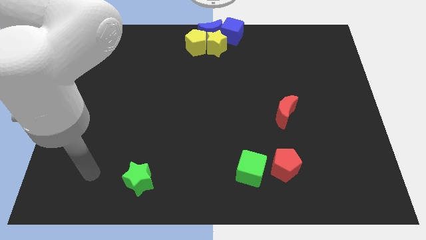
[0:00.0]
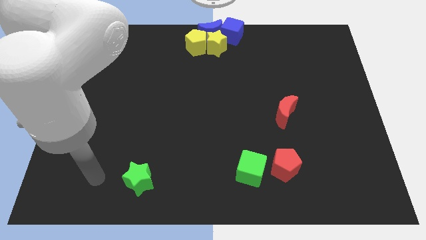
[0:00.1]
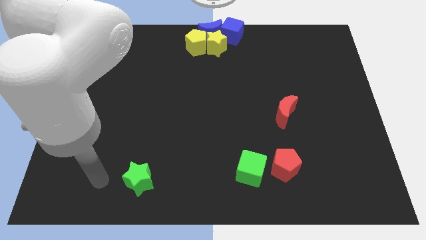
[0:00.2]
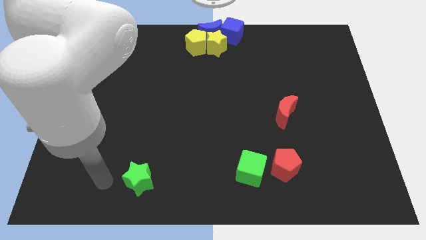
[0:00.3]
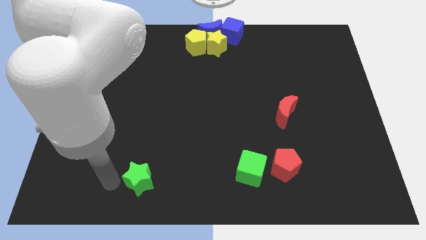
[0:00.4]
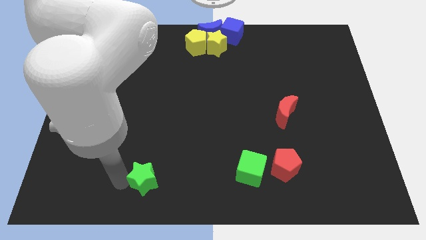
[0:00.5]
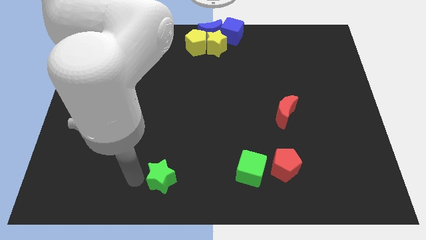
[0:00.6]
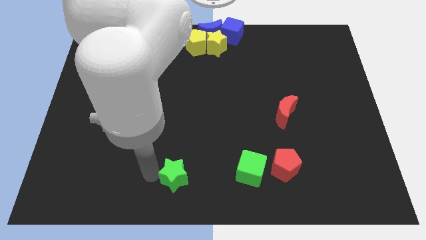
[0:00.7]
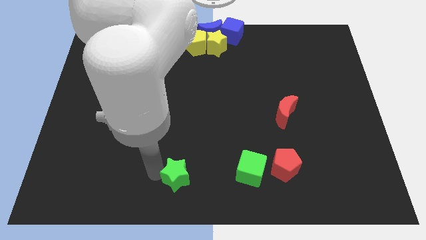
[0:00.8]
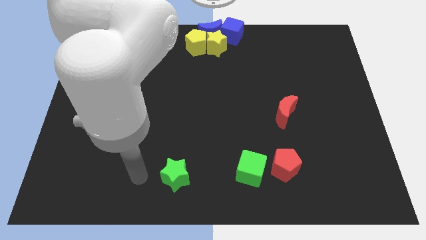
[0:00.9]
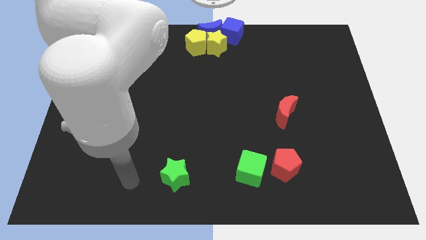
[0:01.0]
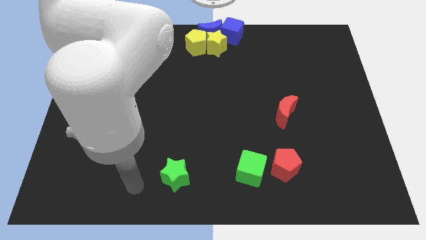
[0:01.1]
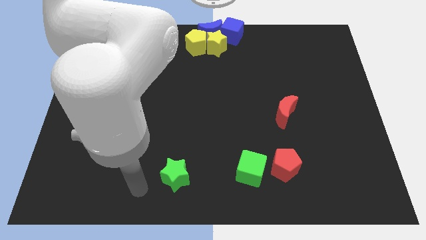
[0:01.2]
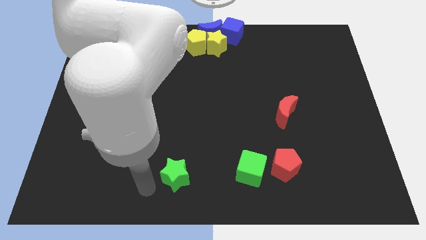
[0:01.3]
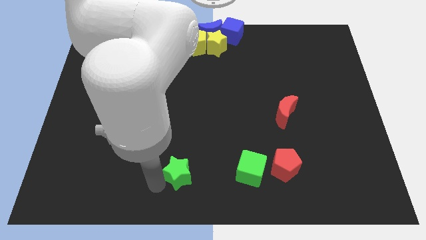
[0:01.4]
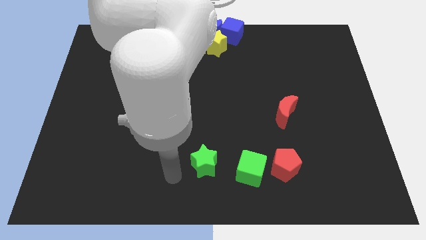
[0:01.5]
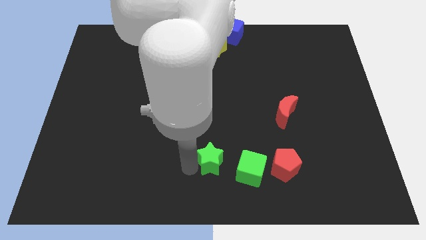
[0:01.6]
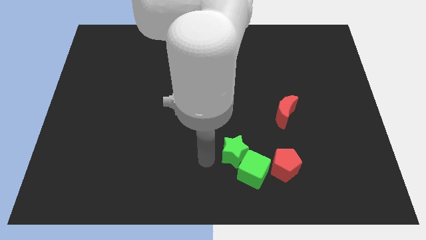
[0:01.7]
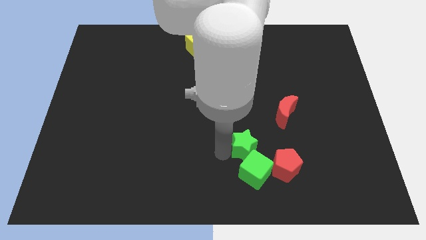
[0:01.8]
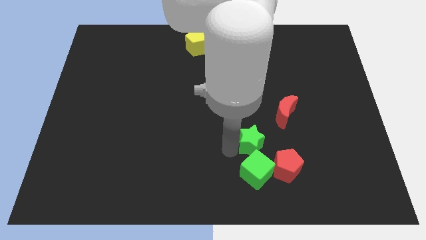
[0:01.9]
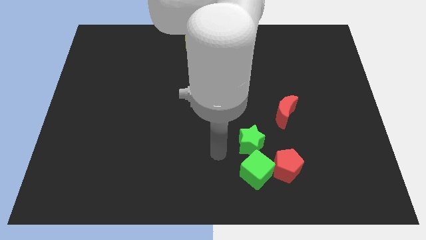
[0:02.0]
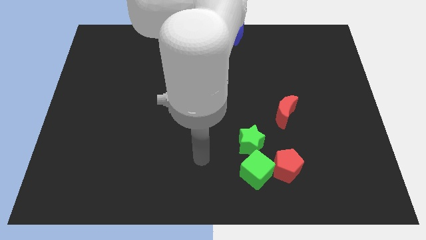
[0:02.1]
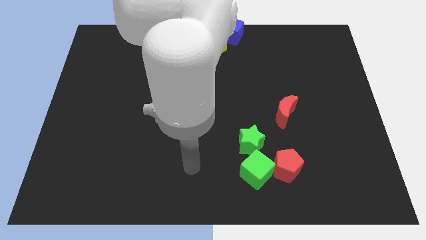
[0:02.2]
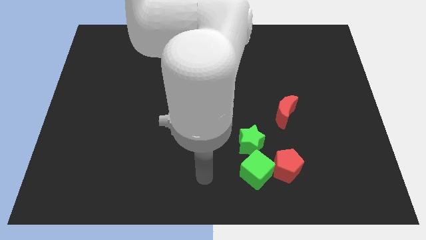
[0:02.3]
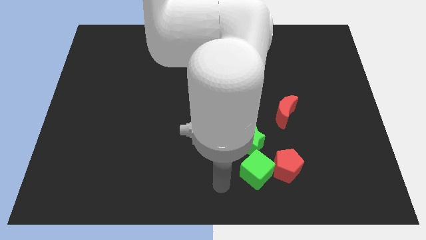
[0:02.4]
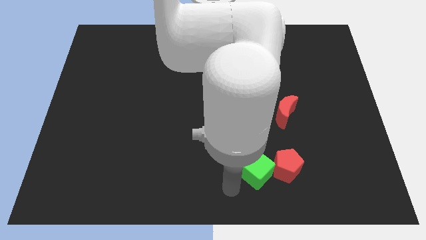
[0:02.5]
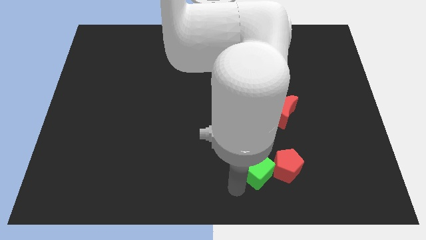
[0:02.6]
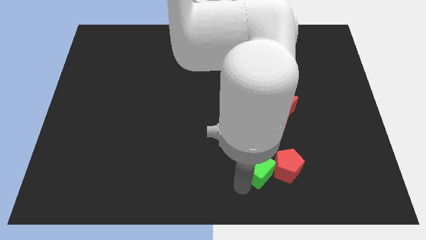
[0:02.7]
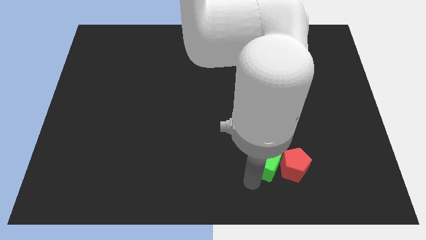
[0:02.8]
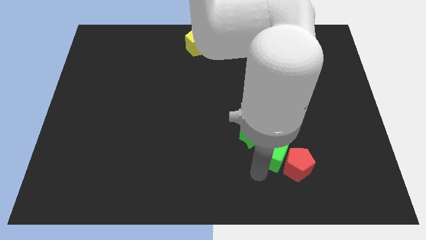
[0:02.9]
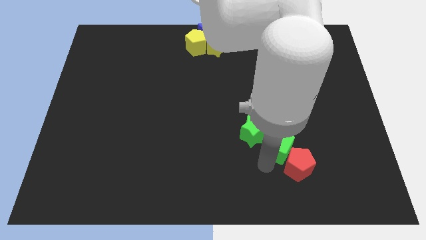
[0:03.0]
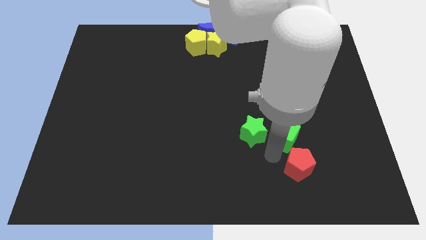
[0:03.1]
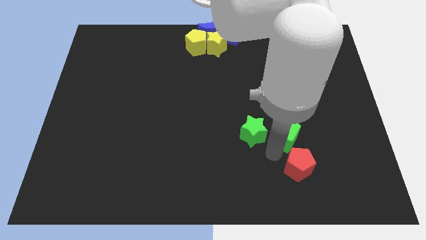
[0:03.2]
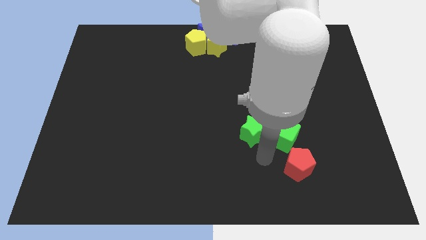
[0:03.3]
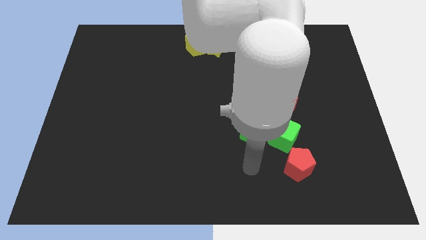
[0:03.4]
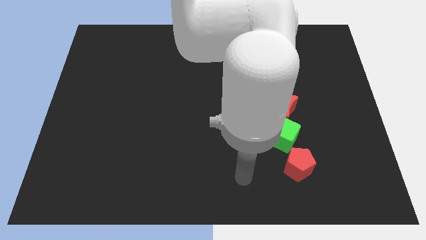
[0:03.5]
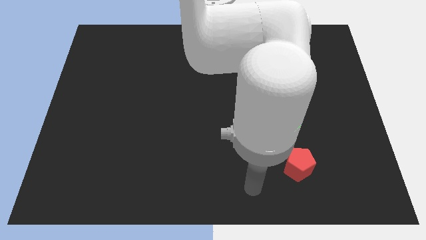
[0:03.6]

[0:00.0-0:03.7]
place the green cube down to the red moon

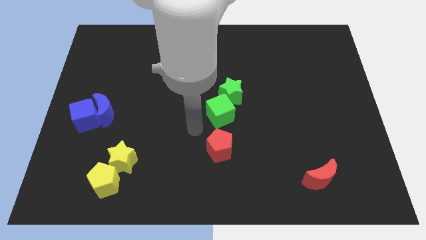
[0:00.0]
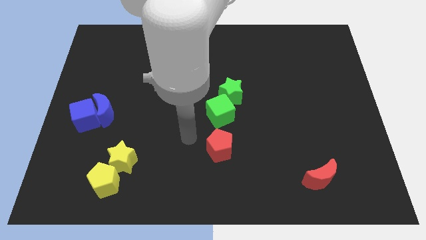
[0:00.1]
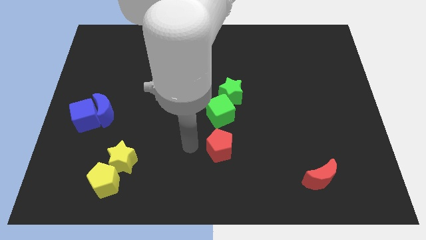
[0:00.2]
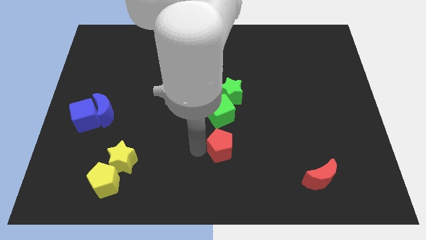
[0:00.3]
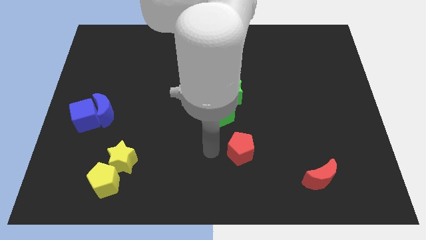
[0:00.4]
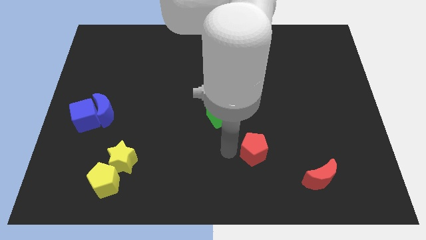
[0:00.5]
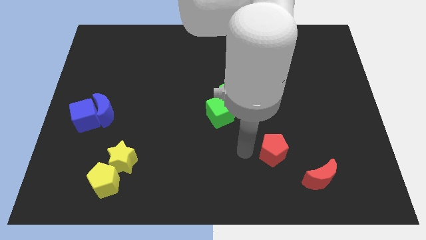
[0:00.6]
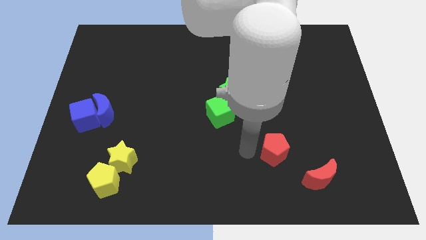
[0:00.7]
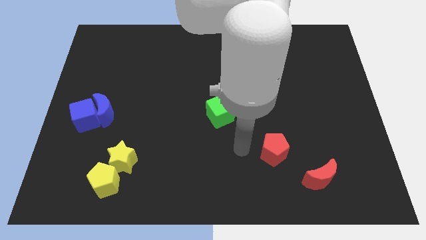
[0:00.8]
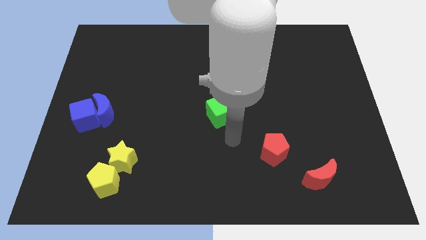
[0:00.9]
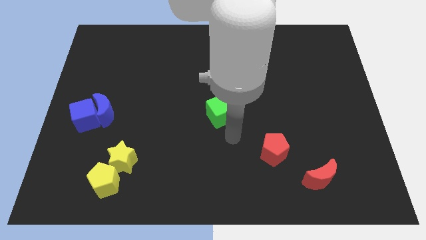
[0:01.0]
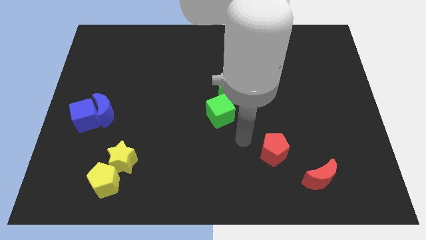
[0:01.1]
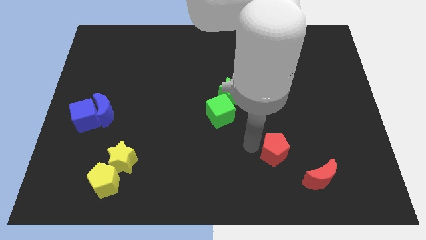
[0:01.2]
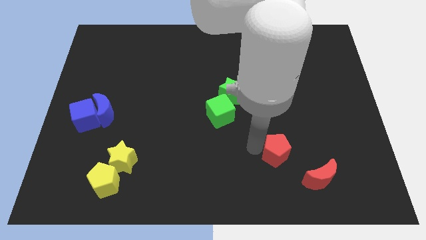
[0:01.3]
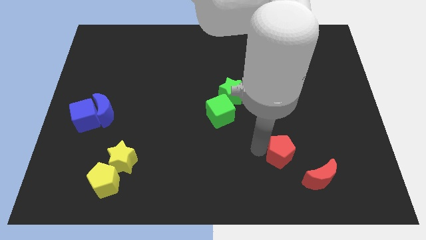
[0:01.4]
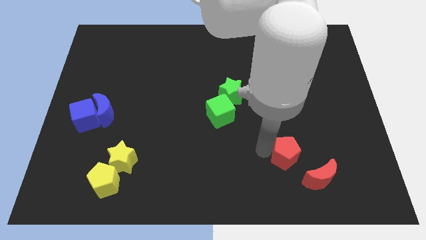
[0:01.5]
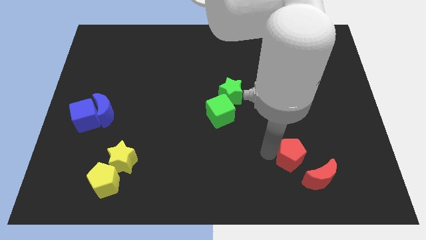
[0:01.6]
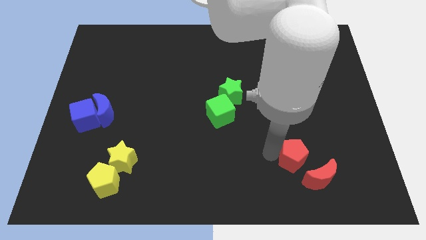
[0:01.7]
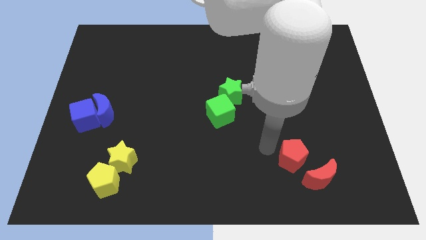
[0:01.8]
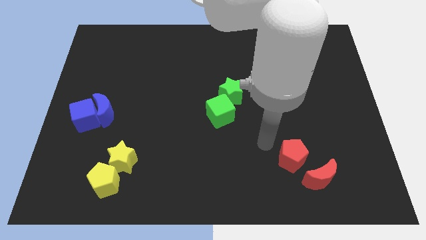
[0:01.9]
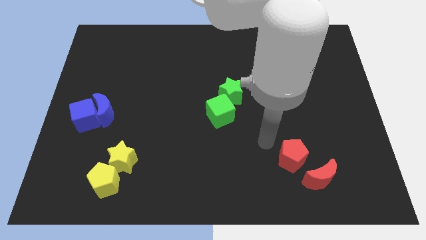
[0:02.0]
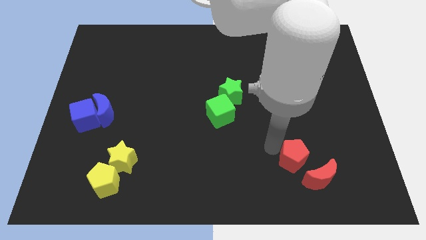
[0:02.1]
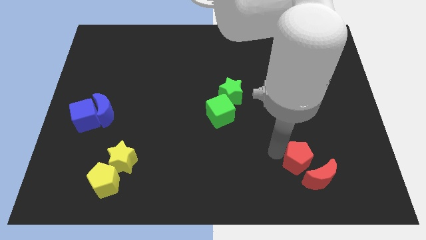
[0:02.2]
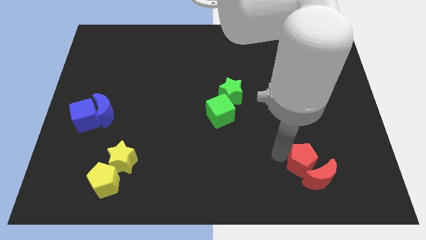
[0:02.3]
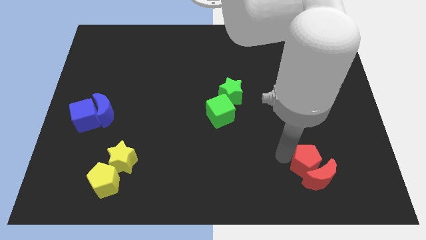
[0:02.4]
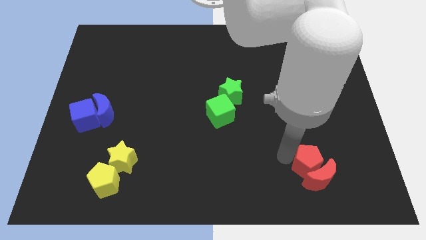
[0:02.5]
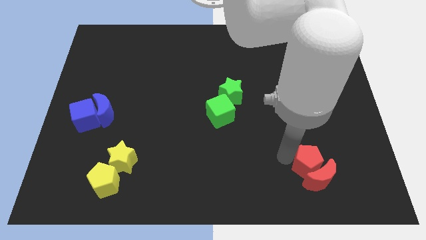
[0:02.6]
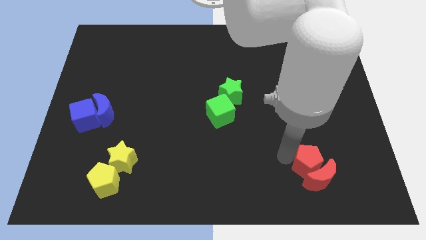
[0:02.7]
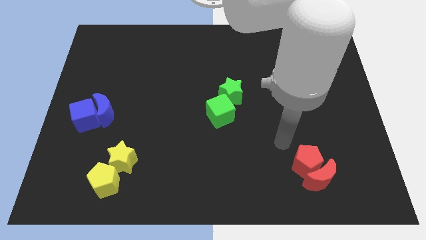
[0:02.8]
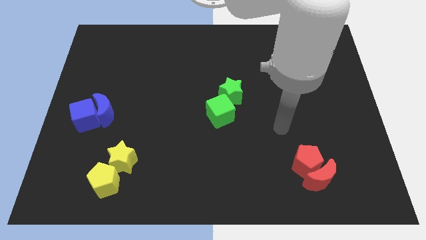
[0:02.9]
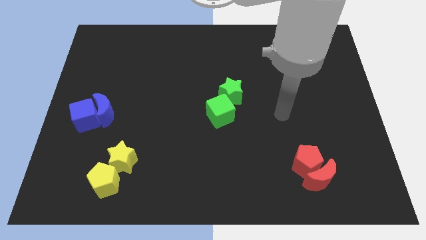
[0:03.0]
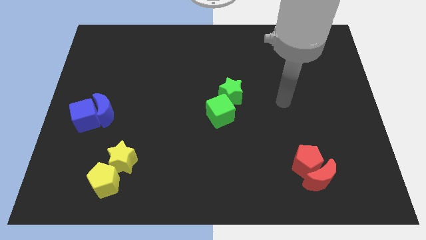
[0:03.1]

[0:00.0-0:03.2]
push the red pentagon into the red crescent

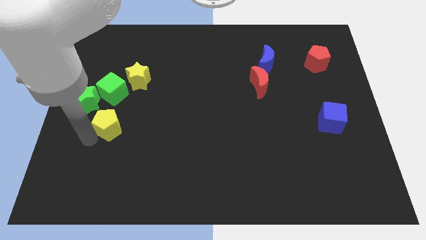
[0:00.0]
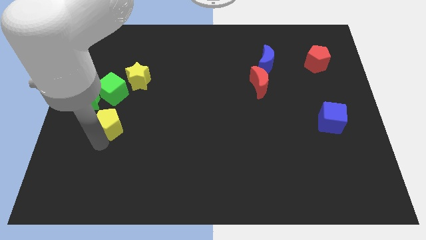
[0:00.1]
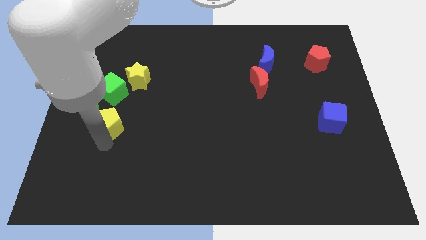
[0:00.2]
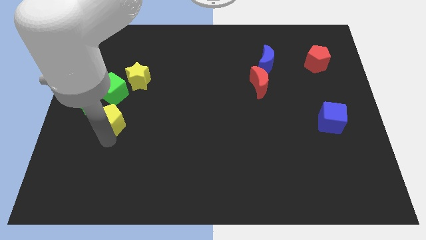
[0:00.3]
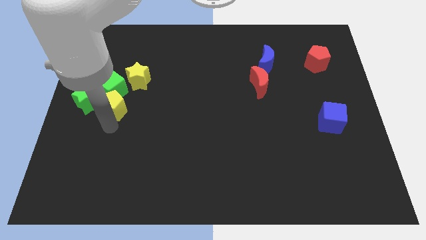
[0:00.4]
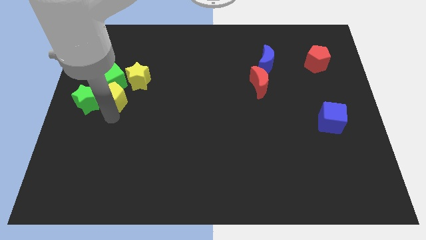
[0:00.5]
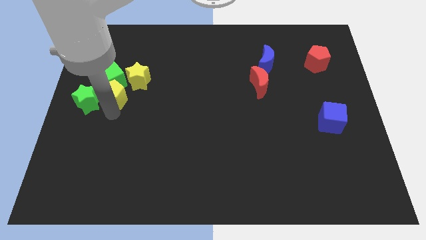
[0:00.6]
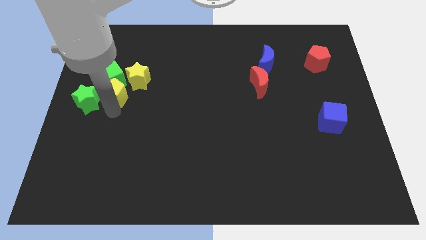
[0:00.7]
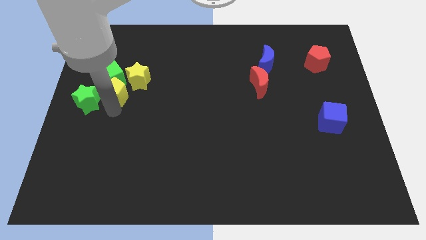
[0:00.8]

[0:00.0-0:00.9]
push the yellow pentagon into the green cube

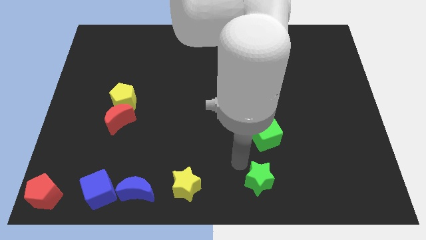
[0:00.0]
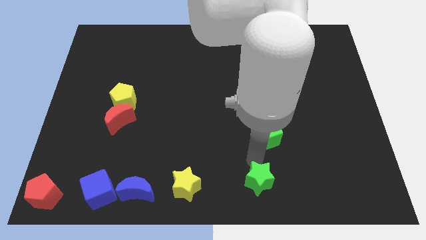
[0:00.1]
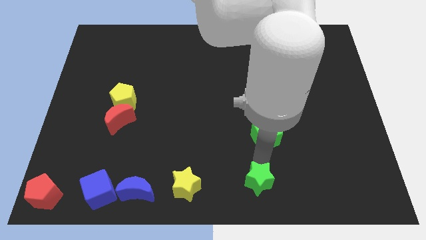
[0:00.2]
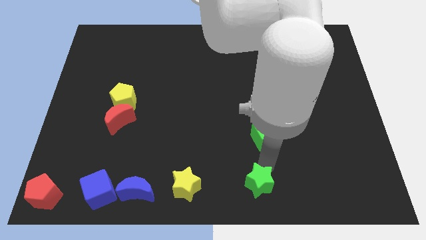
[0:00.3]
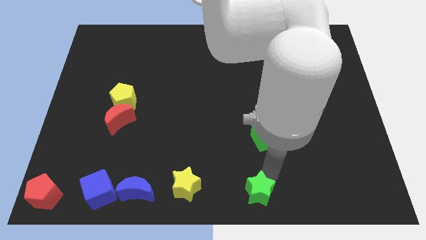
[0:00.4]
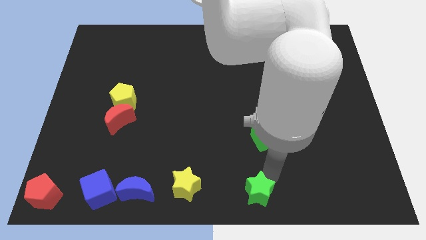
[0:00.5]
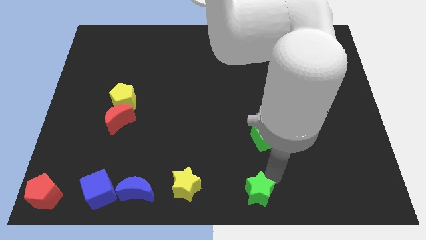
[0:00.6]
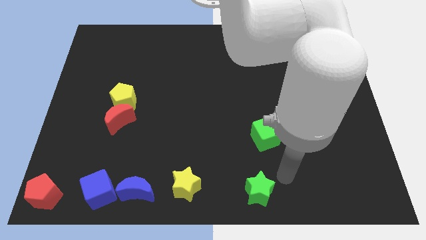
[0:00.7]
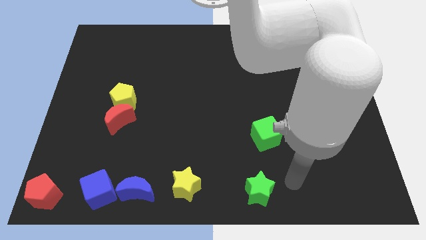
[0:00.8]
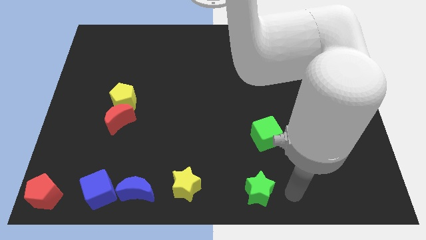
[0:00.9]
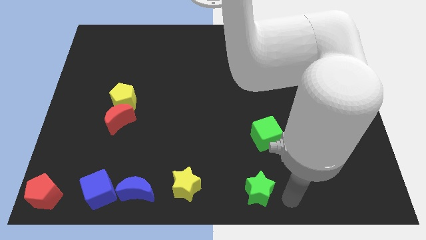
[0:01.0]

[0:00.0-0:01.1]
slightly move the green star to the bottom center

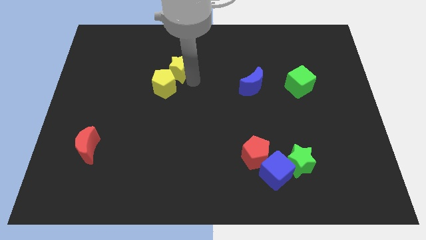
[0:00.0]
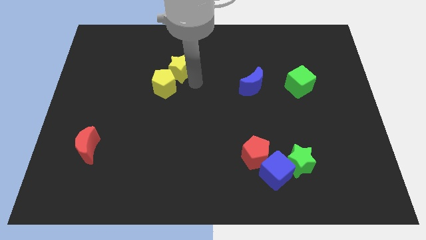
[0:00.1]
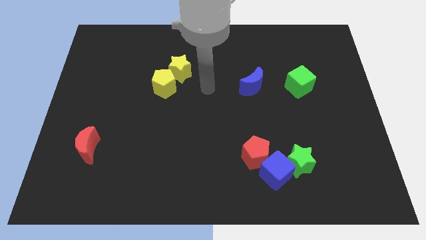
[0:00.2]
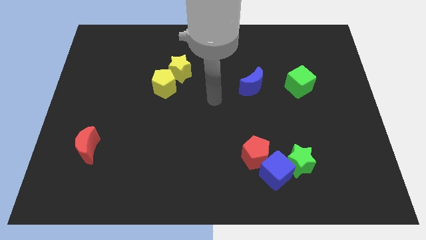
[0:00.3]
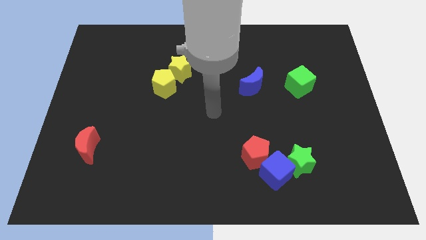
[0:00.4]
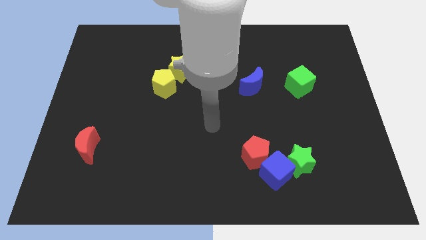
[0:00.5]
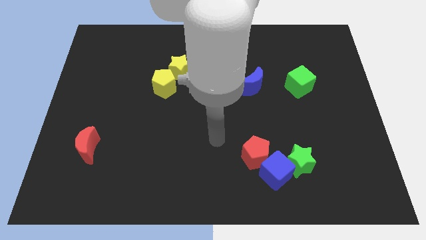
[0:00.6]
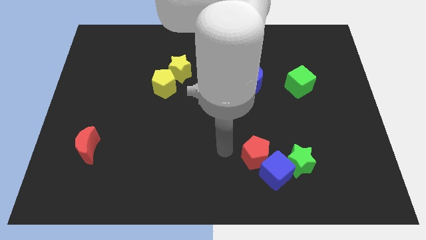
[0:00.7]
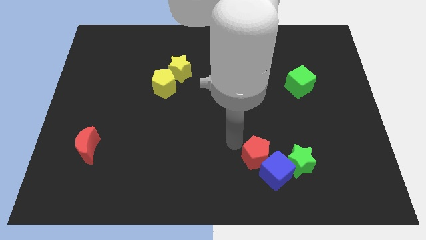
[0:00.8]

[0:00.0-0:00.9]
place your arm to the left of red pentagon
